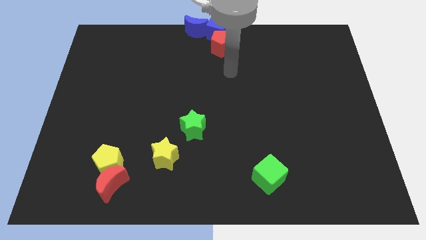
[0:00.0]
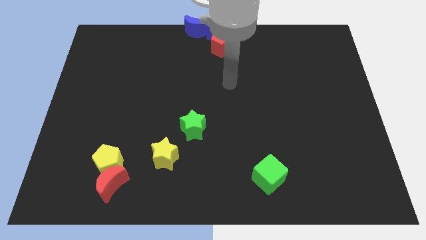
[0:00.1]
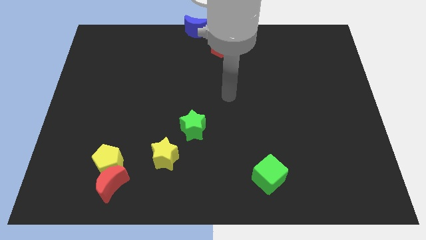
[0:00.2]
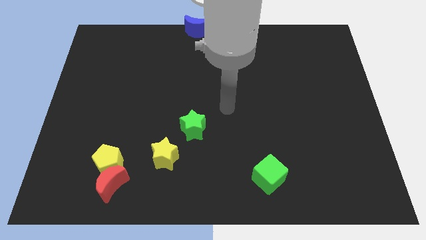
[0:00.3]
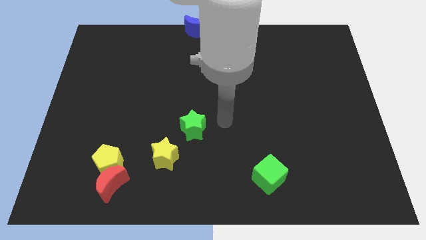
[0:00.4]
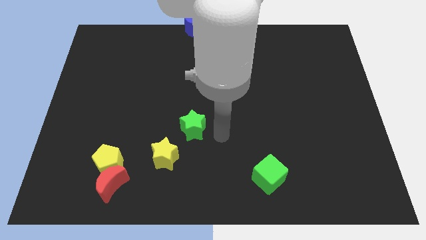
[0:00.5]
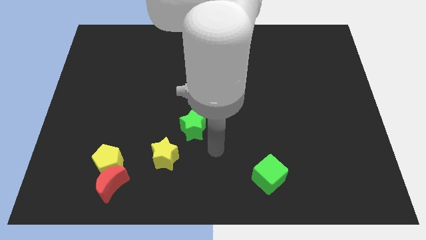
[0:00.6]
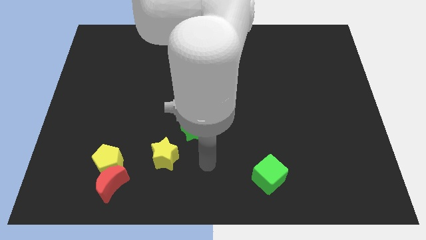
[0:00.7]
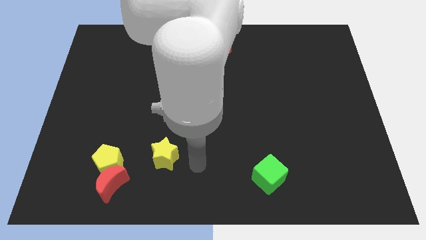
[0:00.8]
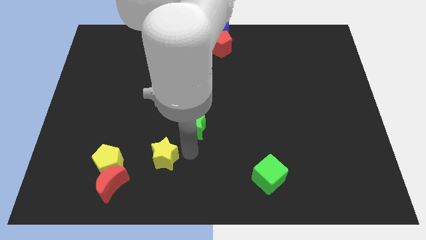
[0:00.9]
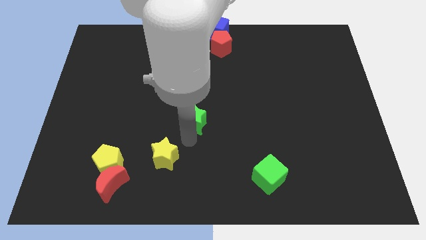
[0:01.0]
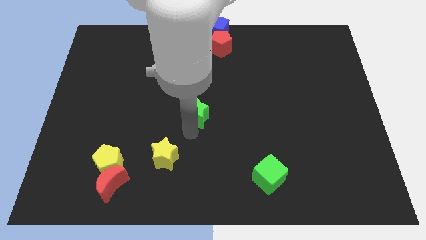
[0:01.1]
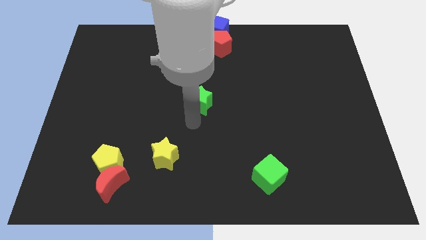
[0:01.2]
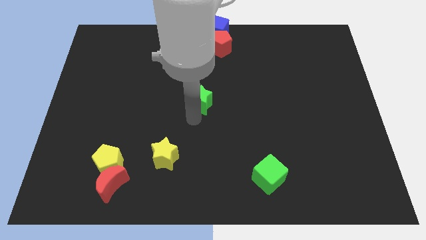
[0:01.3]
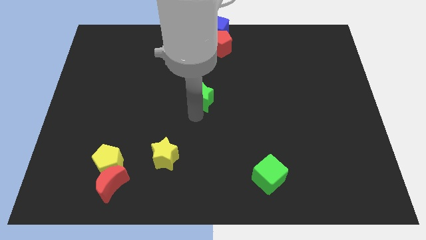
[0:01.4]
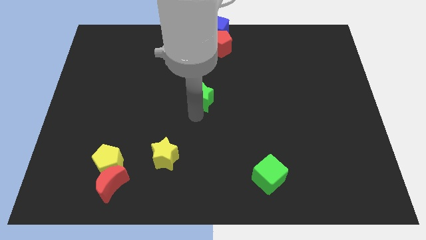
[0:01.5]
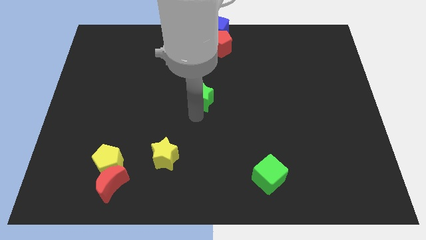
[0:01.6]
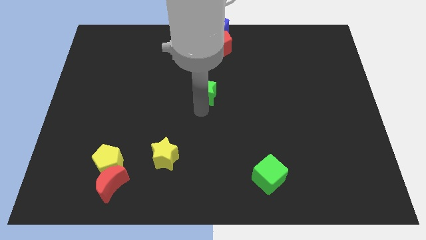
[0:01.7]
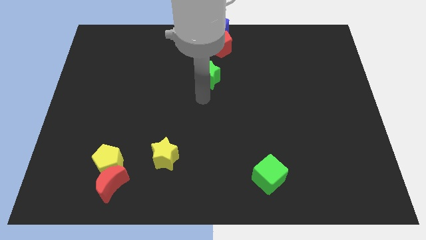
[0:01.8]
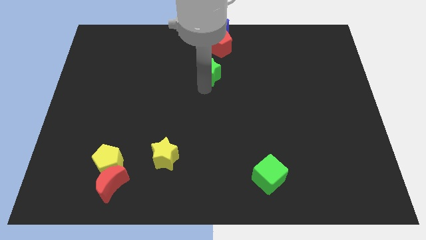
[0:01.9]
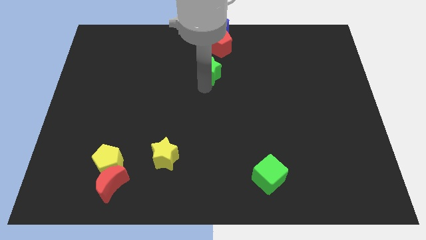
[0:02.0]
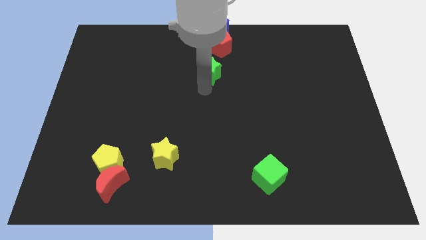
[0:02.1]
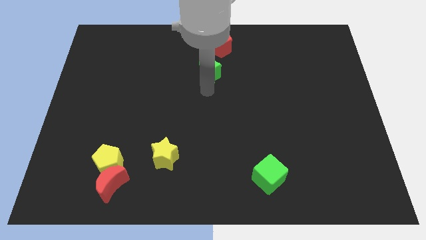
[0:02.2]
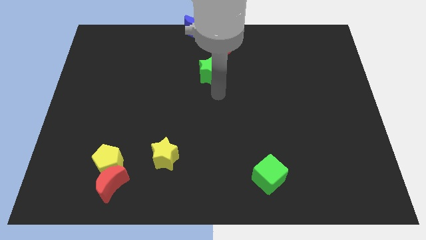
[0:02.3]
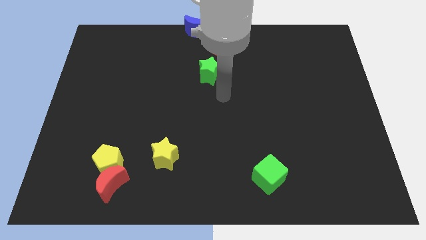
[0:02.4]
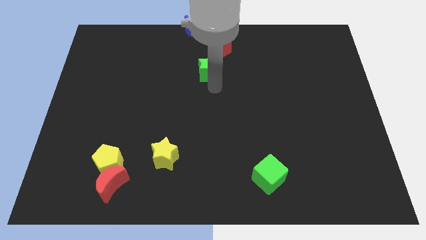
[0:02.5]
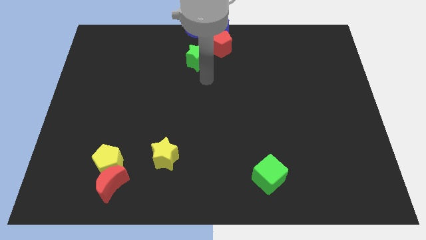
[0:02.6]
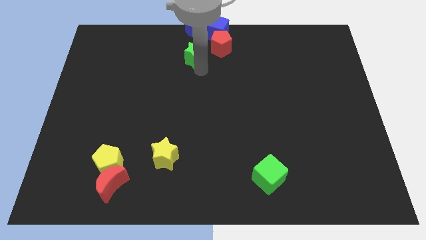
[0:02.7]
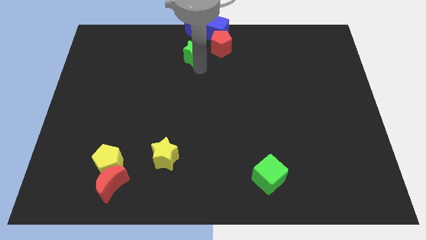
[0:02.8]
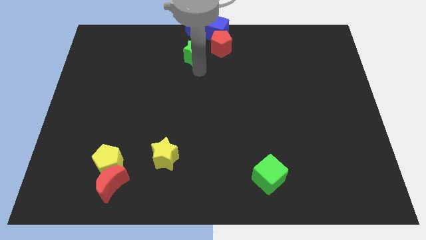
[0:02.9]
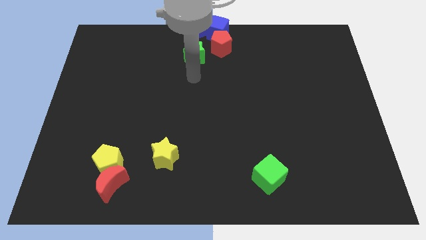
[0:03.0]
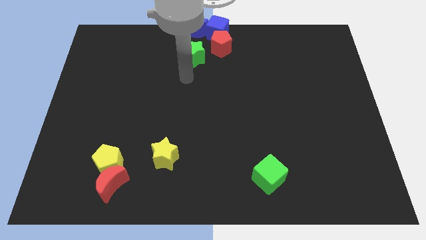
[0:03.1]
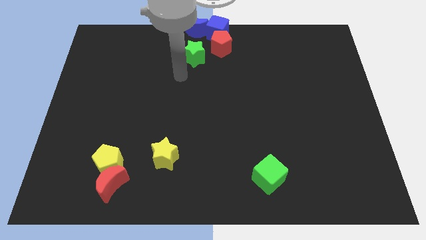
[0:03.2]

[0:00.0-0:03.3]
push the green star below the blue crescent

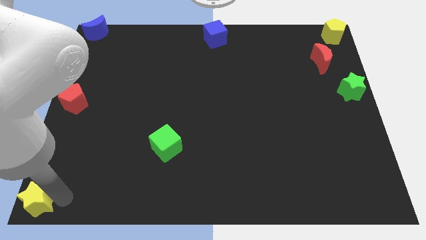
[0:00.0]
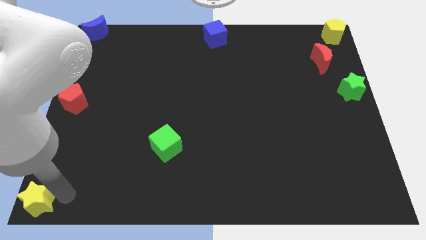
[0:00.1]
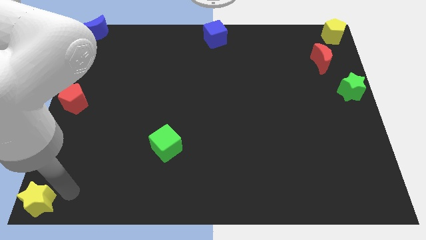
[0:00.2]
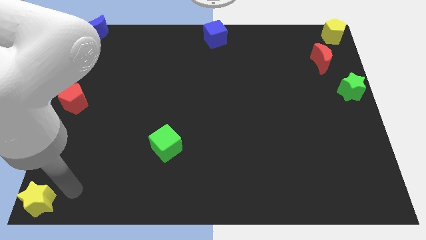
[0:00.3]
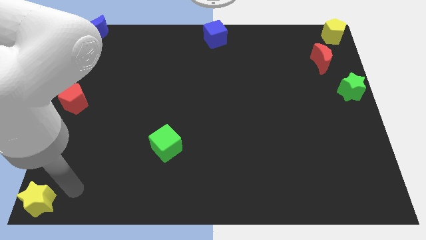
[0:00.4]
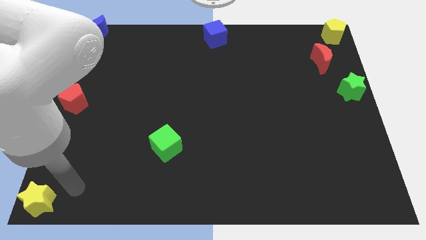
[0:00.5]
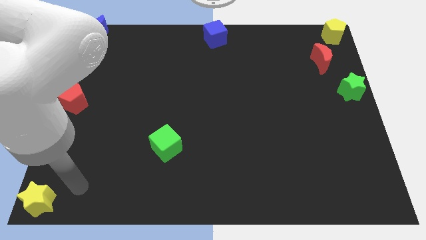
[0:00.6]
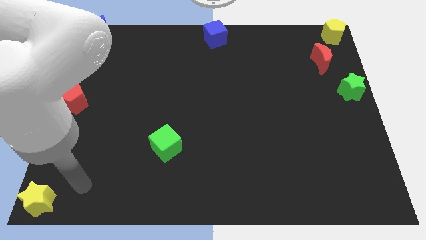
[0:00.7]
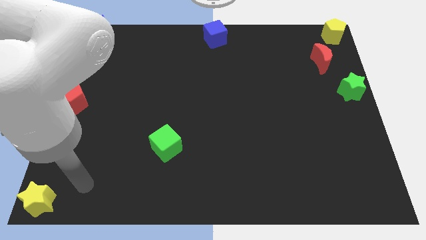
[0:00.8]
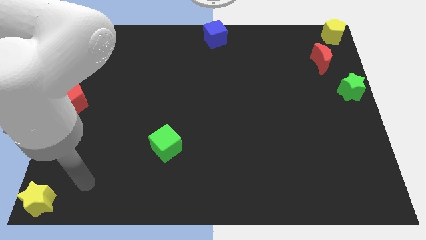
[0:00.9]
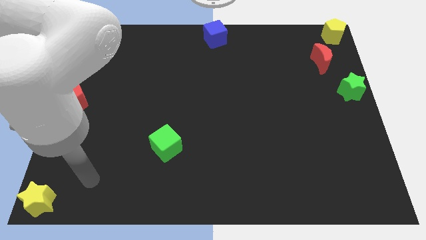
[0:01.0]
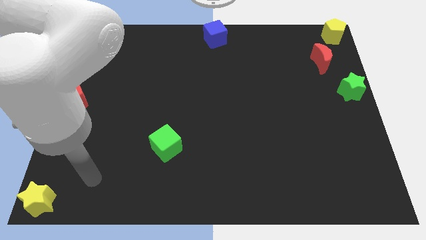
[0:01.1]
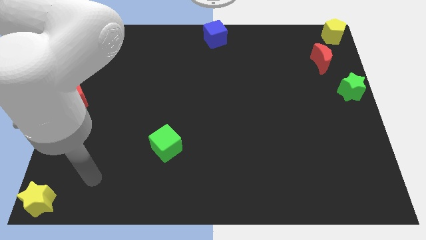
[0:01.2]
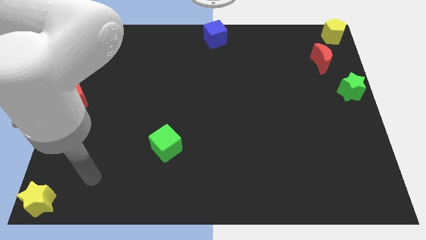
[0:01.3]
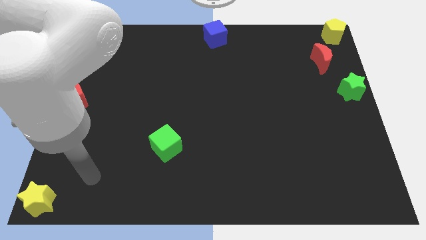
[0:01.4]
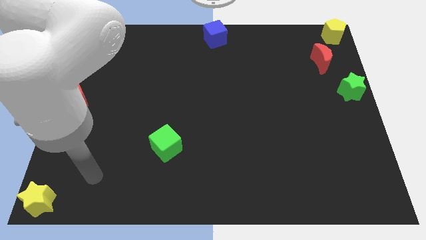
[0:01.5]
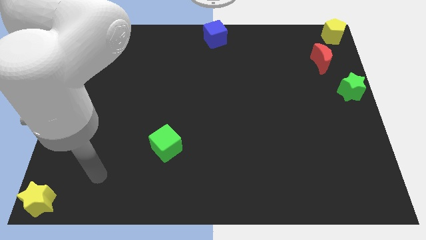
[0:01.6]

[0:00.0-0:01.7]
move your arm towards the center of the board

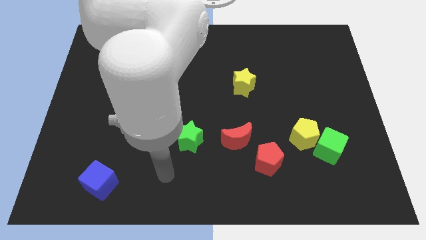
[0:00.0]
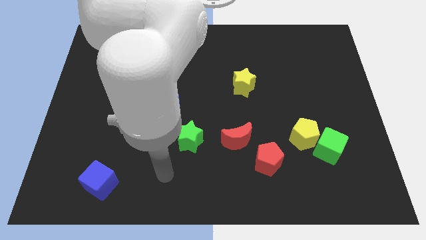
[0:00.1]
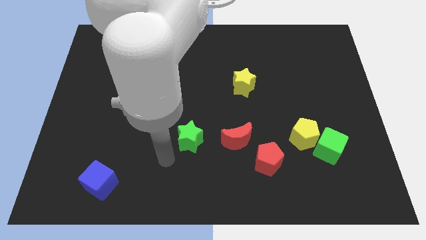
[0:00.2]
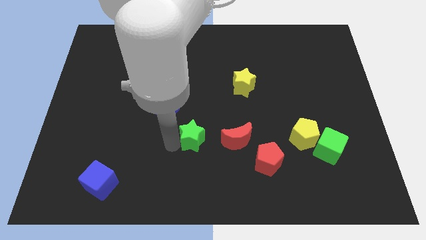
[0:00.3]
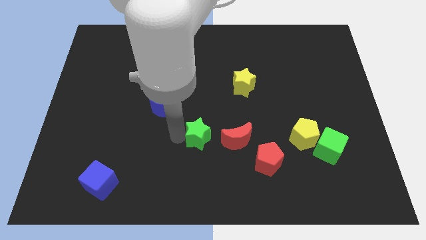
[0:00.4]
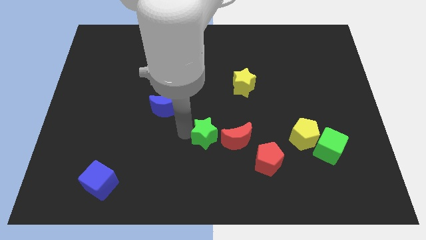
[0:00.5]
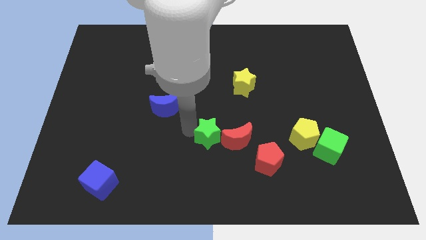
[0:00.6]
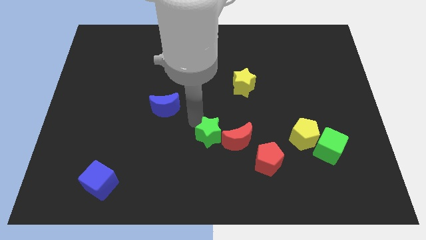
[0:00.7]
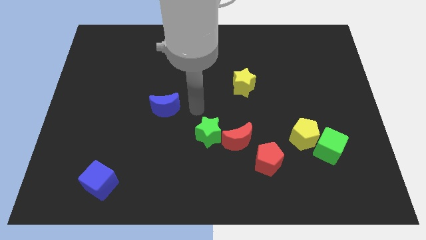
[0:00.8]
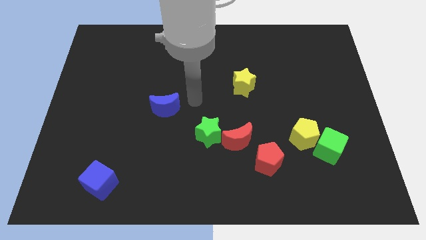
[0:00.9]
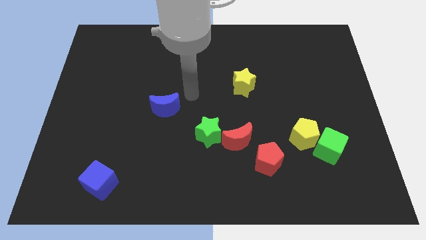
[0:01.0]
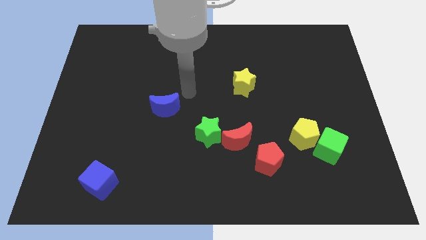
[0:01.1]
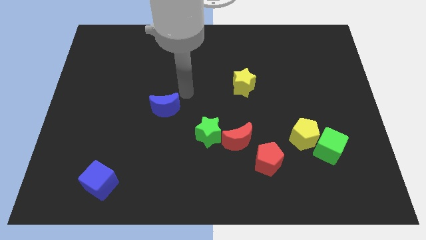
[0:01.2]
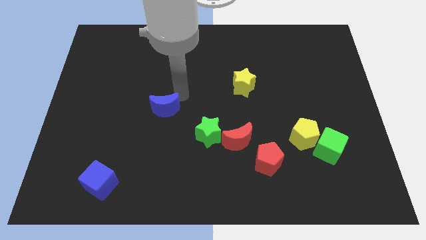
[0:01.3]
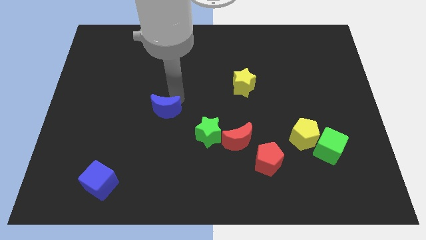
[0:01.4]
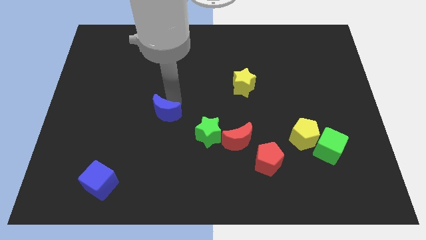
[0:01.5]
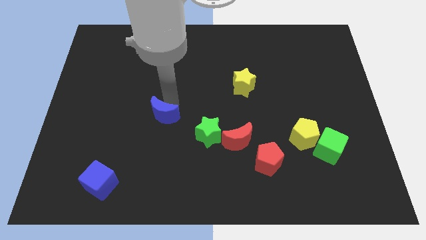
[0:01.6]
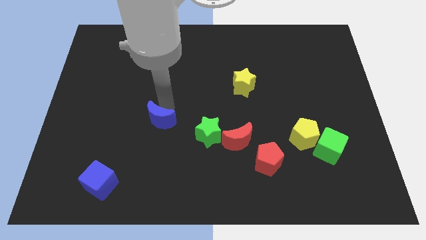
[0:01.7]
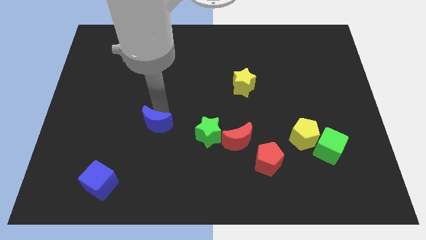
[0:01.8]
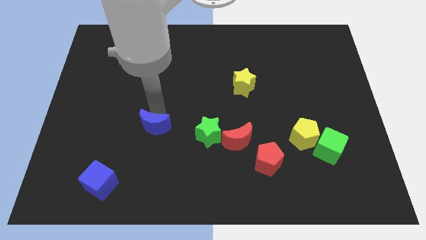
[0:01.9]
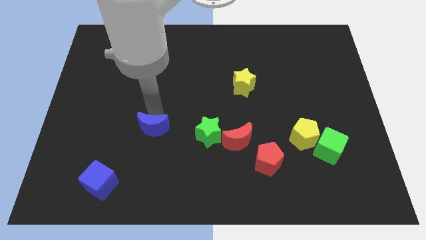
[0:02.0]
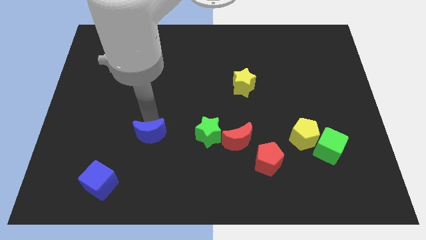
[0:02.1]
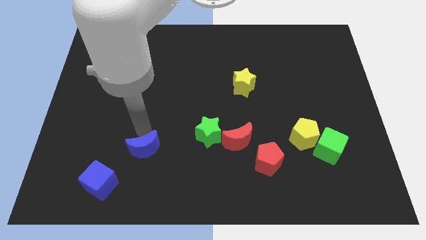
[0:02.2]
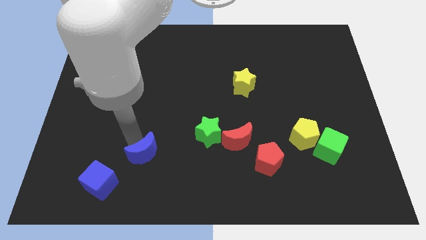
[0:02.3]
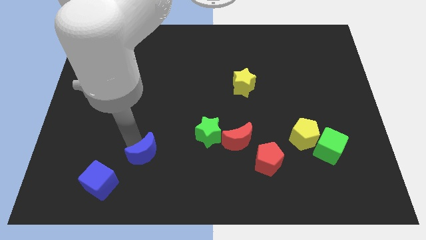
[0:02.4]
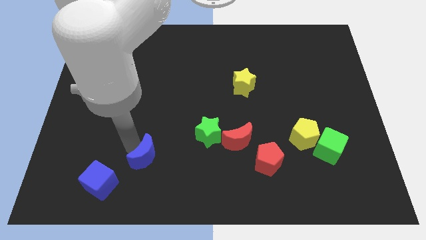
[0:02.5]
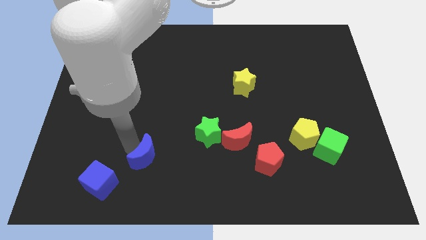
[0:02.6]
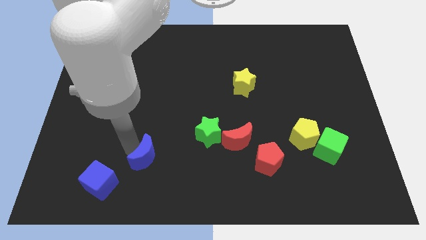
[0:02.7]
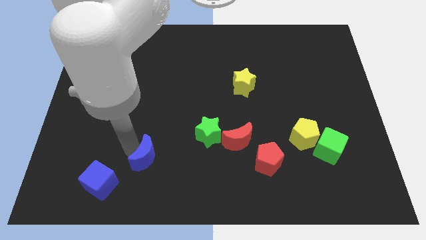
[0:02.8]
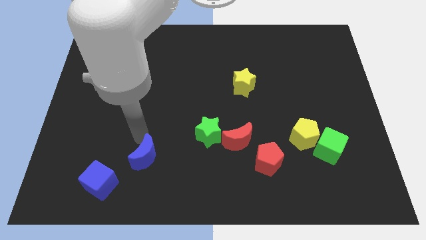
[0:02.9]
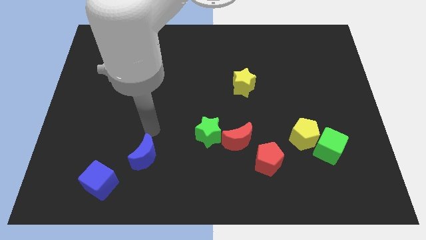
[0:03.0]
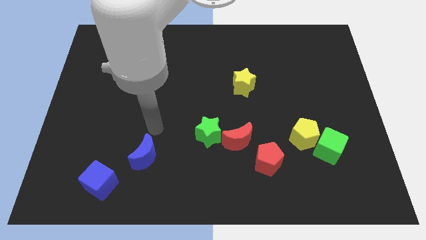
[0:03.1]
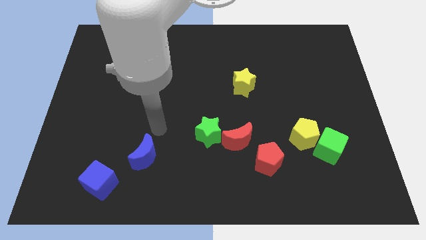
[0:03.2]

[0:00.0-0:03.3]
place the blue moon diagonally above the top right side of the blue cube

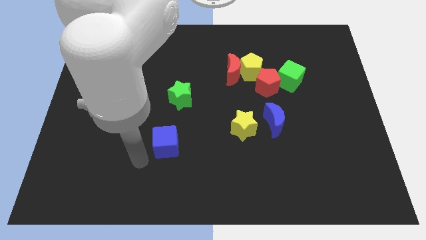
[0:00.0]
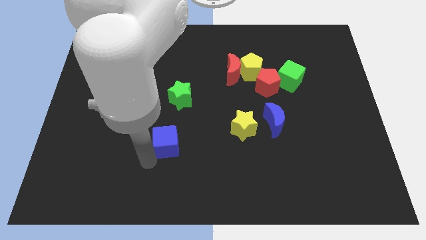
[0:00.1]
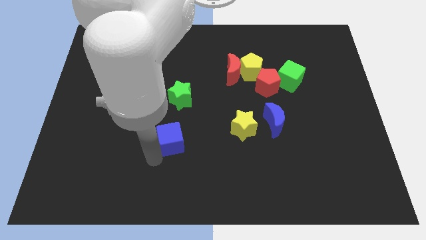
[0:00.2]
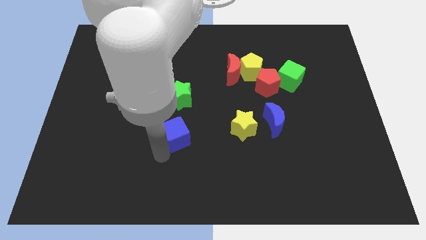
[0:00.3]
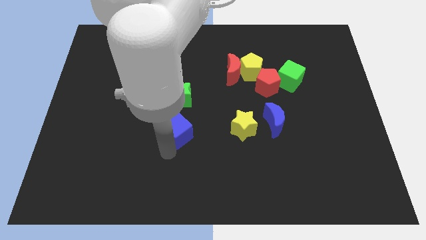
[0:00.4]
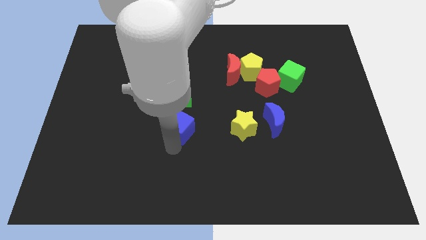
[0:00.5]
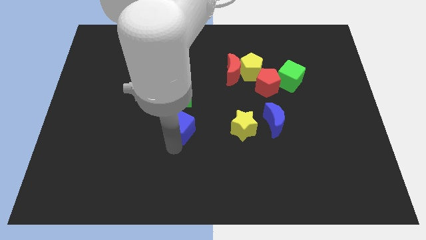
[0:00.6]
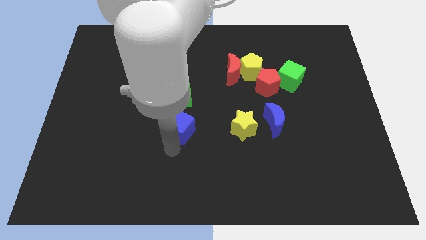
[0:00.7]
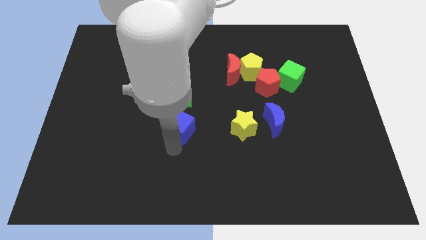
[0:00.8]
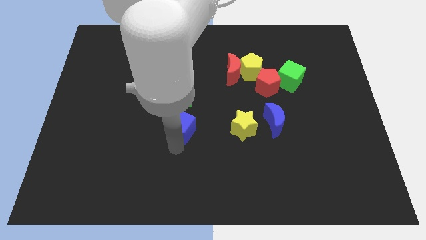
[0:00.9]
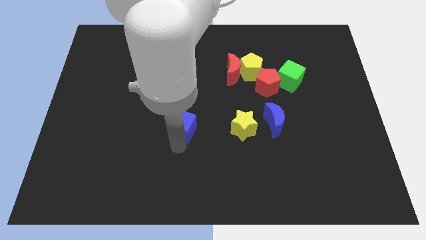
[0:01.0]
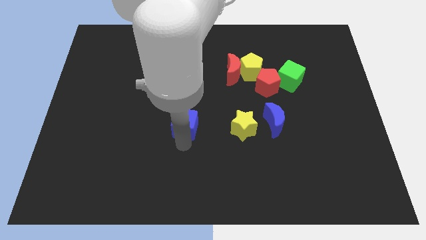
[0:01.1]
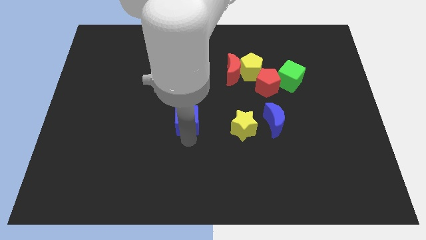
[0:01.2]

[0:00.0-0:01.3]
push the blue cube below the green star
